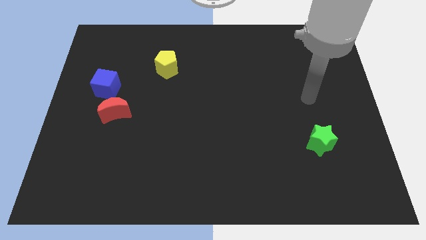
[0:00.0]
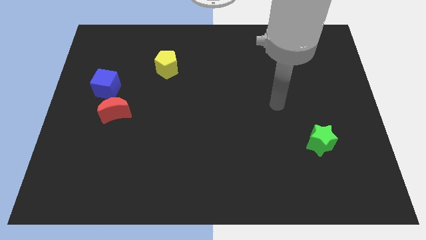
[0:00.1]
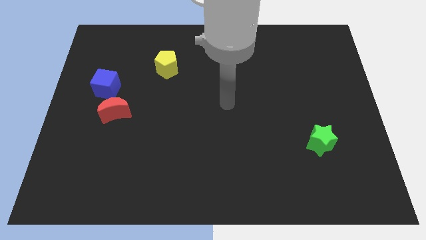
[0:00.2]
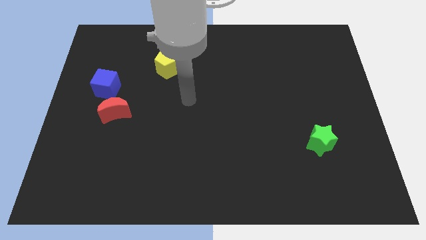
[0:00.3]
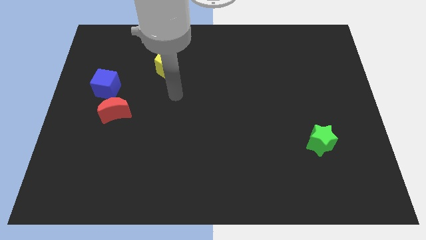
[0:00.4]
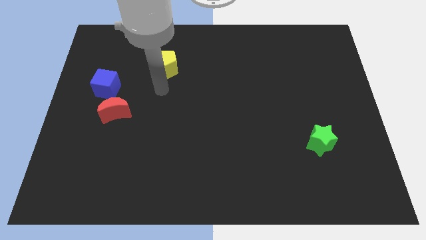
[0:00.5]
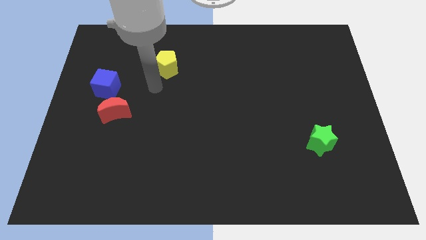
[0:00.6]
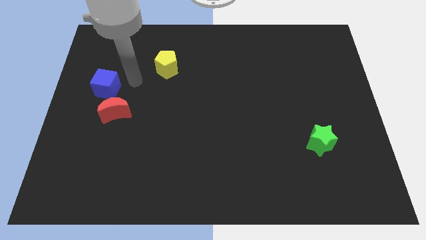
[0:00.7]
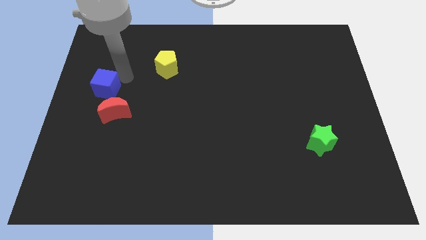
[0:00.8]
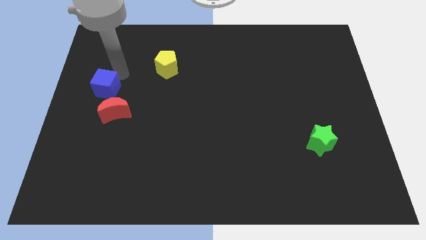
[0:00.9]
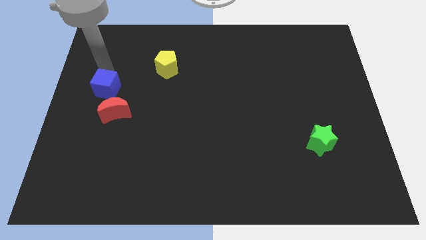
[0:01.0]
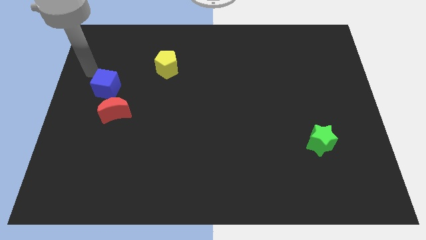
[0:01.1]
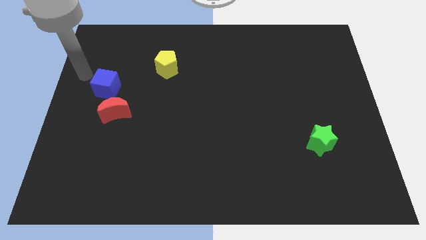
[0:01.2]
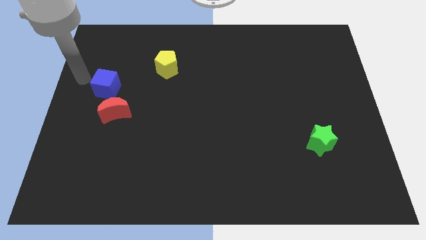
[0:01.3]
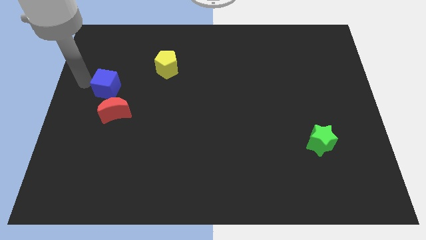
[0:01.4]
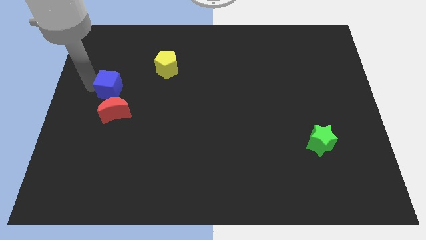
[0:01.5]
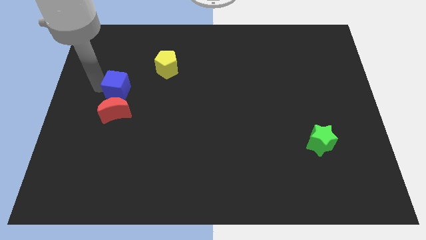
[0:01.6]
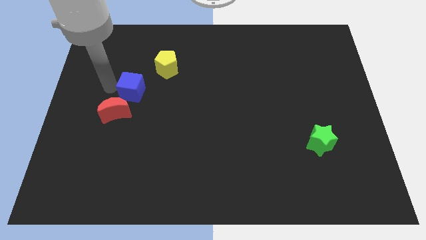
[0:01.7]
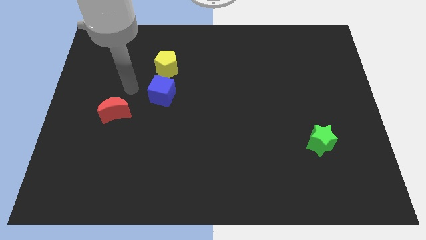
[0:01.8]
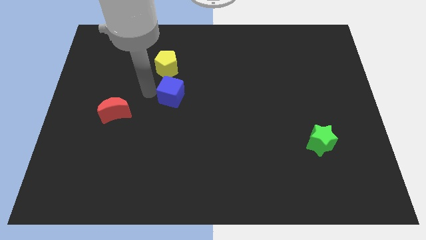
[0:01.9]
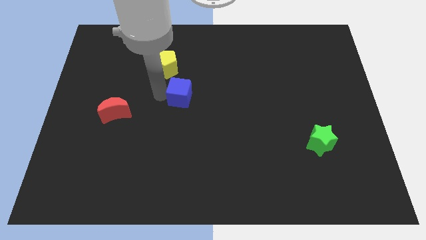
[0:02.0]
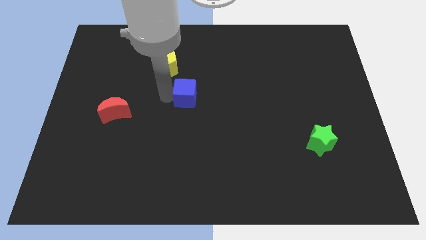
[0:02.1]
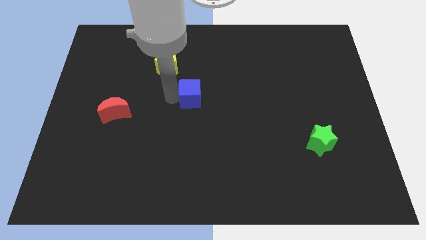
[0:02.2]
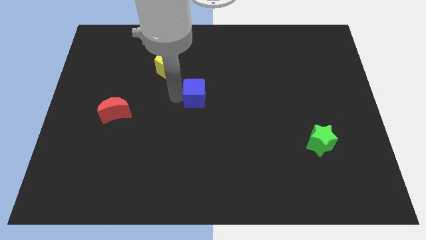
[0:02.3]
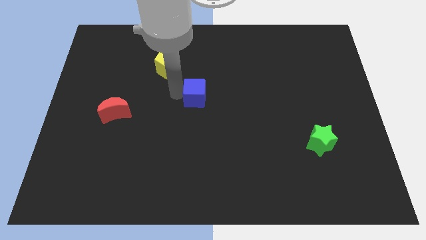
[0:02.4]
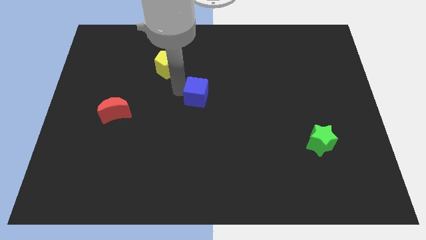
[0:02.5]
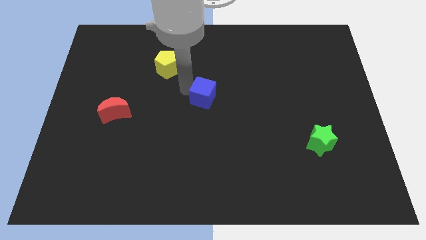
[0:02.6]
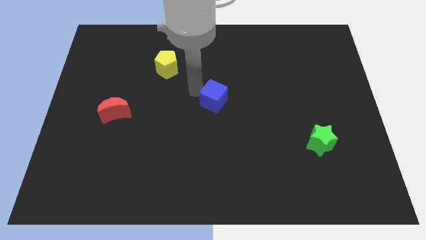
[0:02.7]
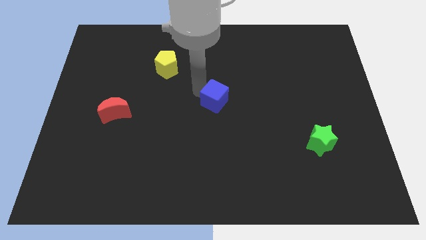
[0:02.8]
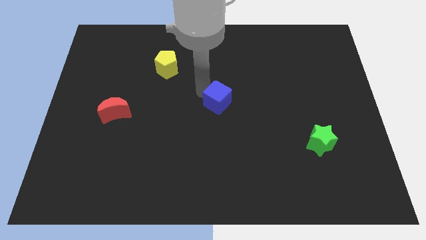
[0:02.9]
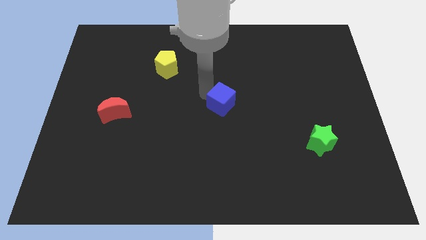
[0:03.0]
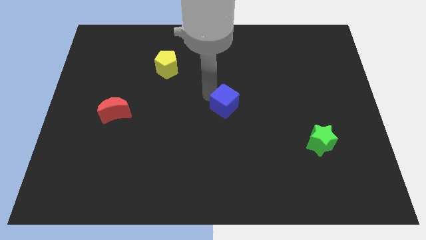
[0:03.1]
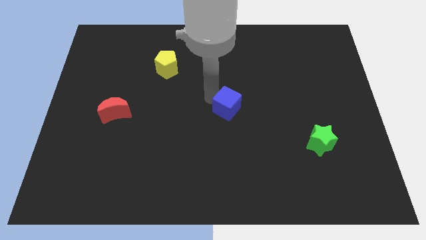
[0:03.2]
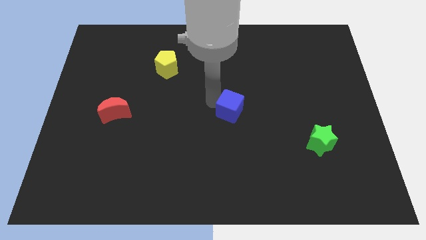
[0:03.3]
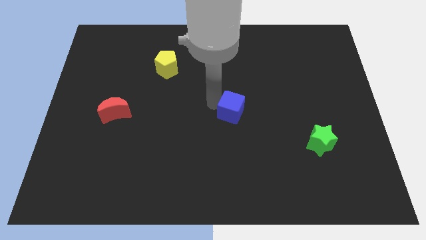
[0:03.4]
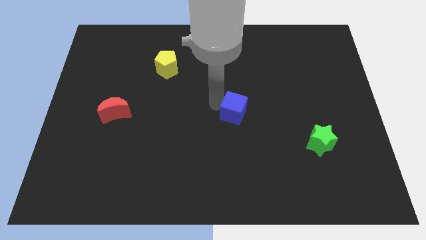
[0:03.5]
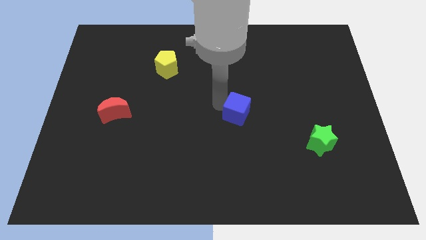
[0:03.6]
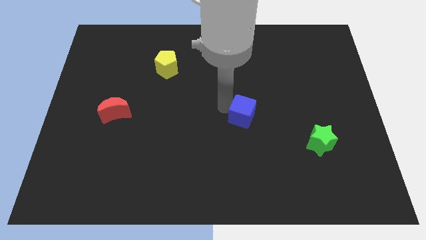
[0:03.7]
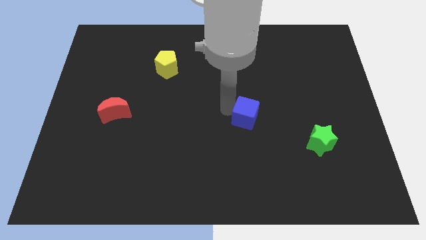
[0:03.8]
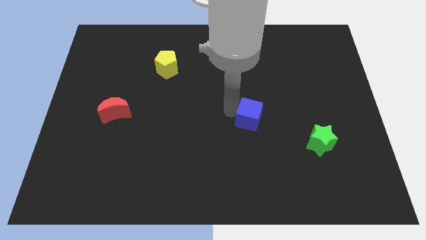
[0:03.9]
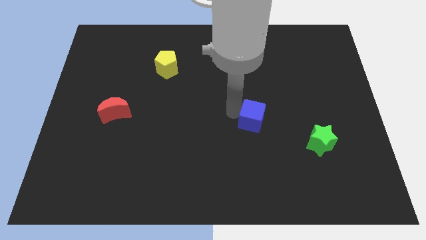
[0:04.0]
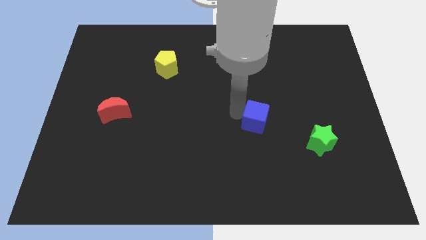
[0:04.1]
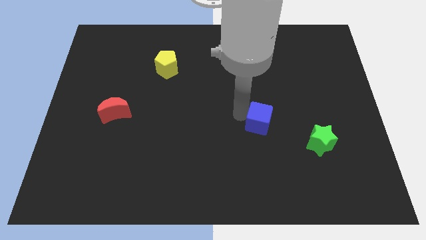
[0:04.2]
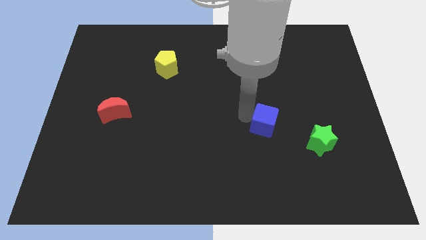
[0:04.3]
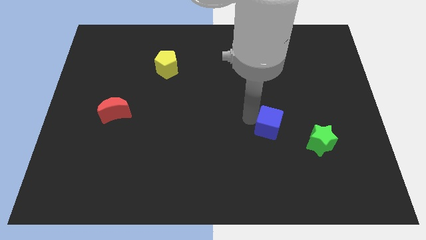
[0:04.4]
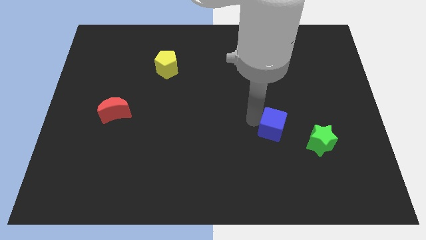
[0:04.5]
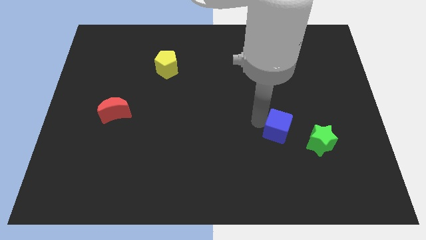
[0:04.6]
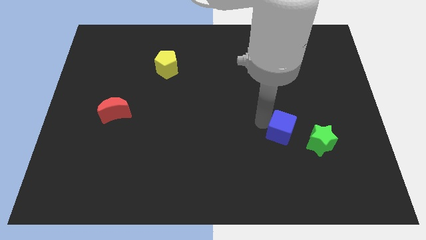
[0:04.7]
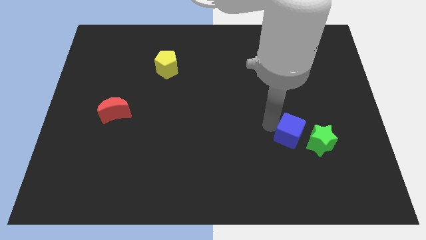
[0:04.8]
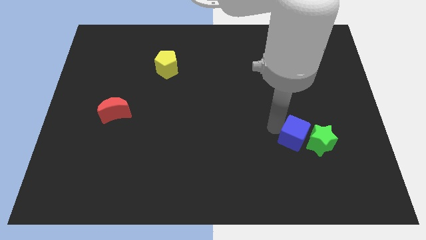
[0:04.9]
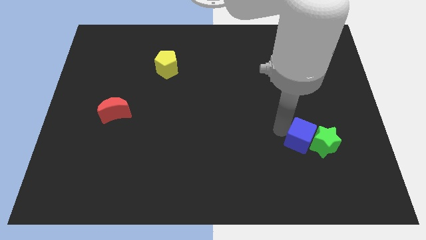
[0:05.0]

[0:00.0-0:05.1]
slide the blue block close to the green block

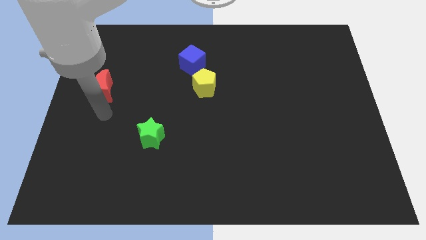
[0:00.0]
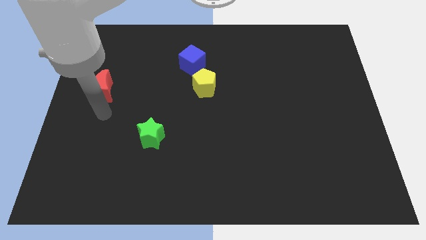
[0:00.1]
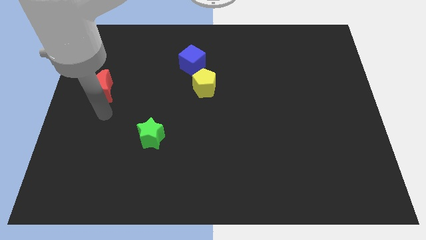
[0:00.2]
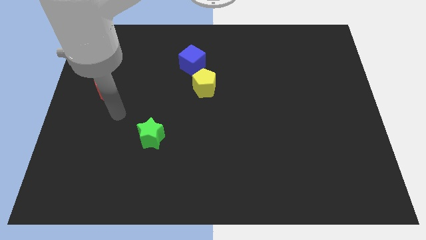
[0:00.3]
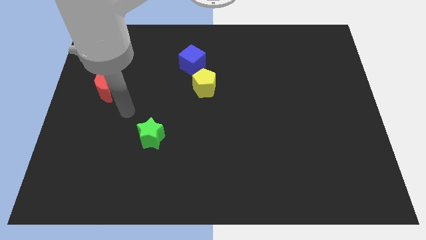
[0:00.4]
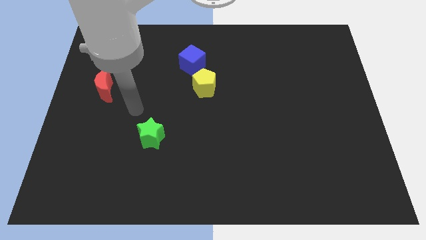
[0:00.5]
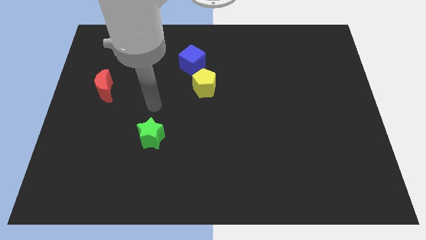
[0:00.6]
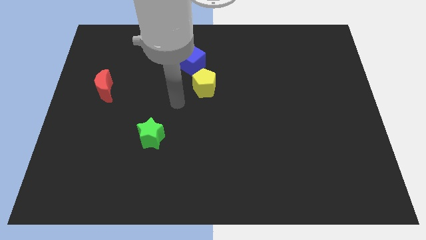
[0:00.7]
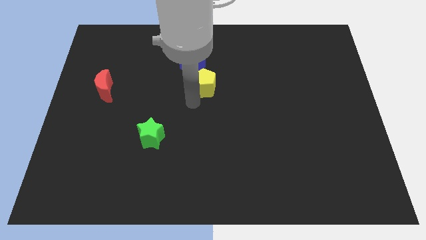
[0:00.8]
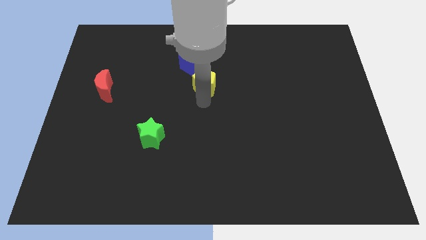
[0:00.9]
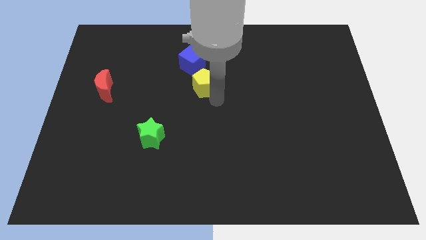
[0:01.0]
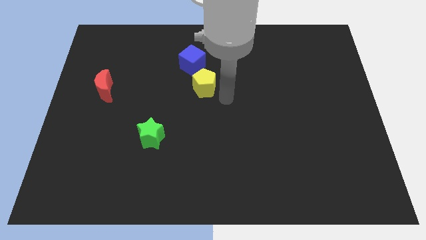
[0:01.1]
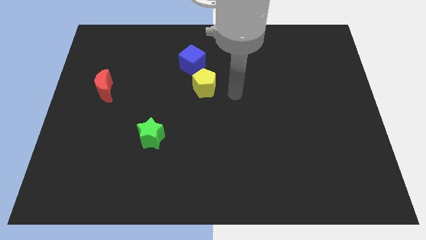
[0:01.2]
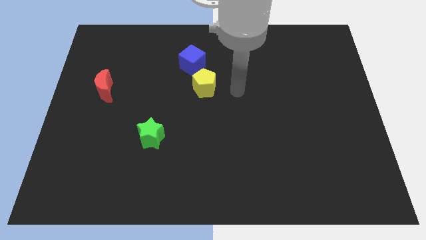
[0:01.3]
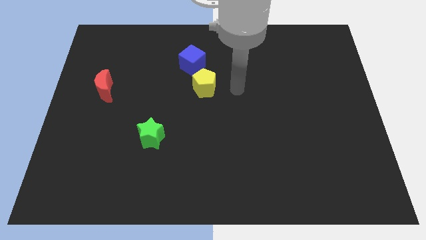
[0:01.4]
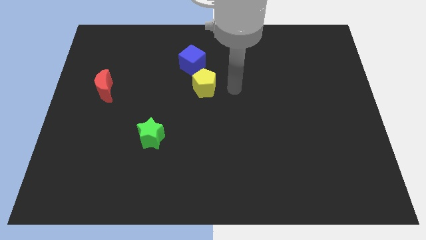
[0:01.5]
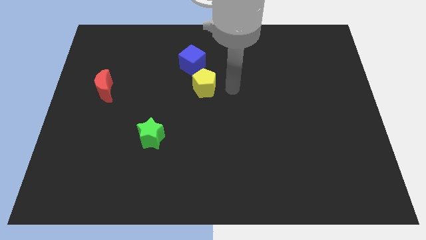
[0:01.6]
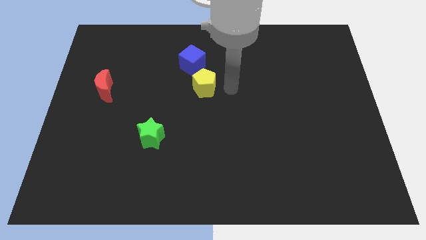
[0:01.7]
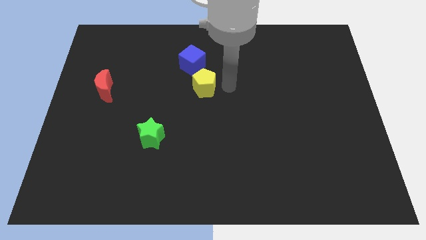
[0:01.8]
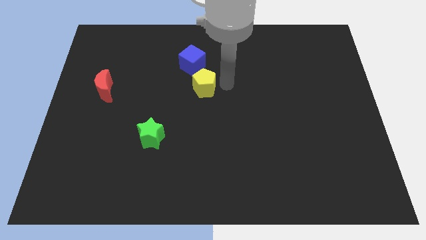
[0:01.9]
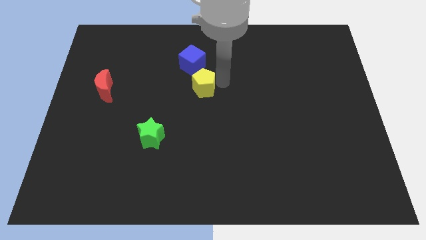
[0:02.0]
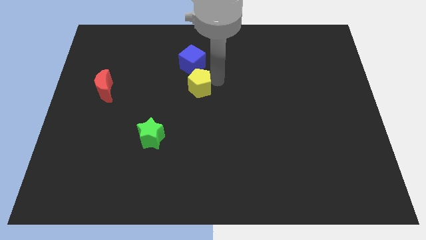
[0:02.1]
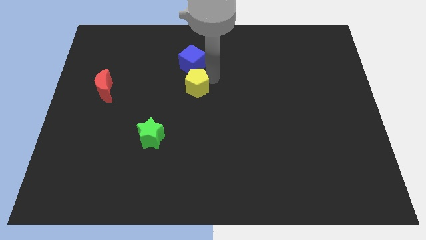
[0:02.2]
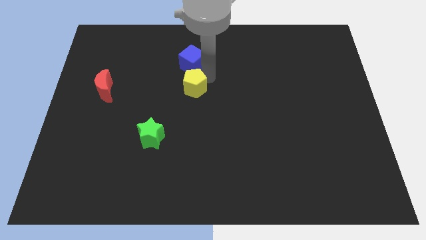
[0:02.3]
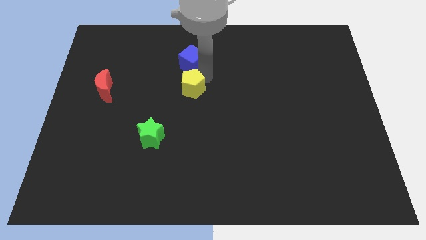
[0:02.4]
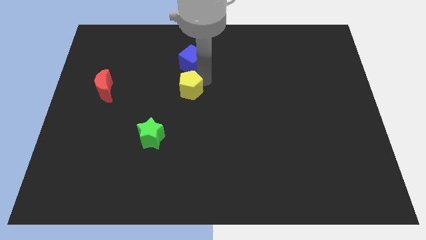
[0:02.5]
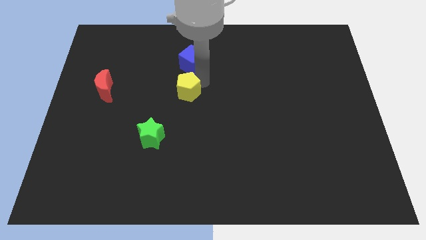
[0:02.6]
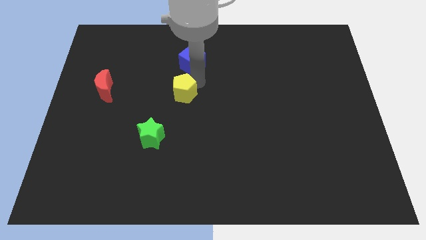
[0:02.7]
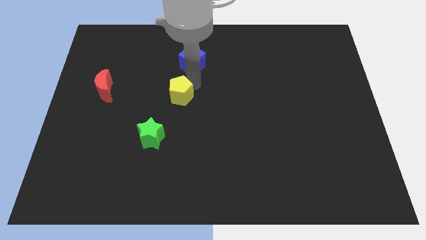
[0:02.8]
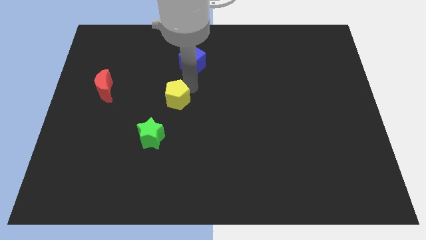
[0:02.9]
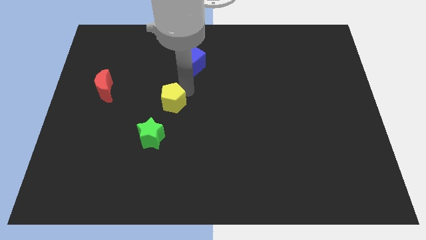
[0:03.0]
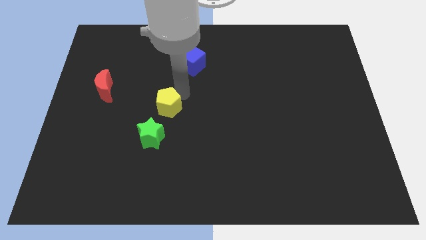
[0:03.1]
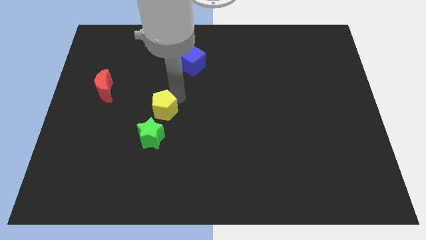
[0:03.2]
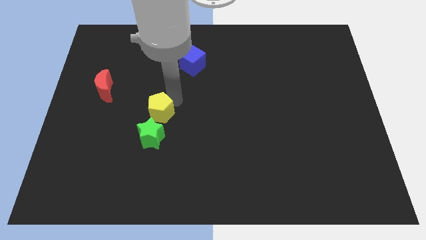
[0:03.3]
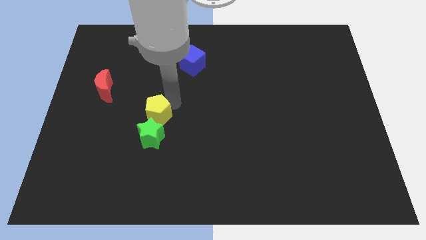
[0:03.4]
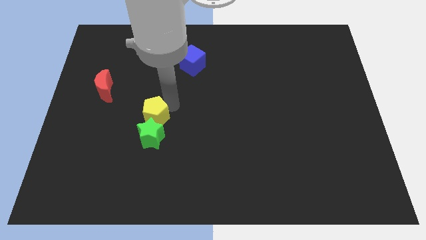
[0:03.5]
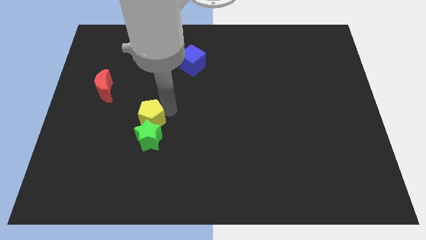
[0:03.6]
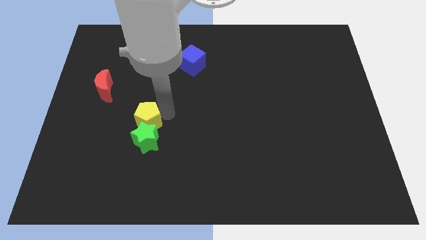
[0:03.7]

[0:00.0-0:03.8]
slide the yellow block next to the star
